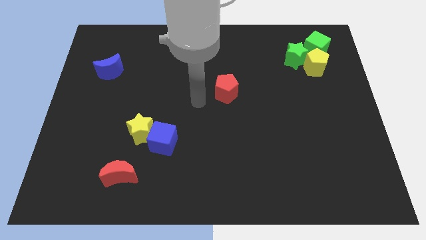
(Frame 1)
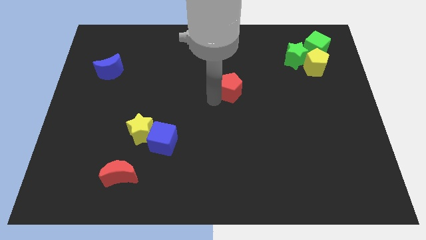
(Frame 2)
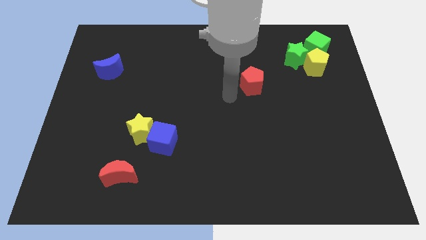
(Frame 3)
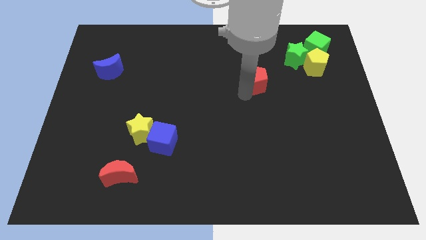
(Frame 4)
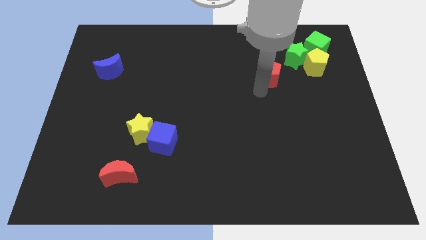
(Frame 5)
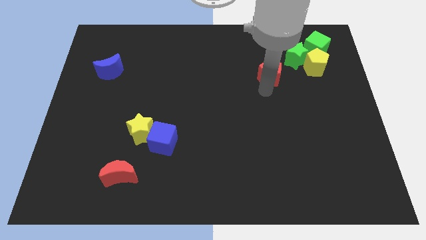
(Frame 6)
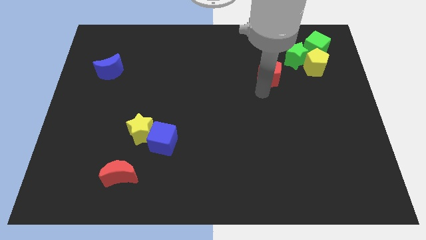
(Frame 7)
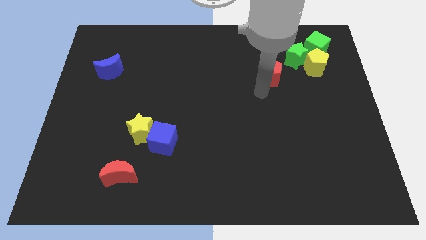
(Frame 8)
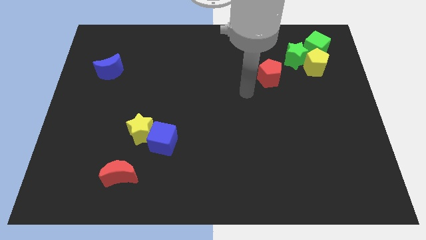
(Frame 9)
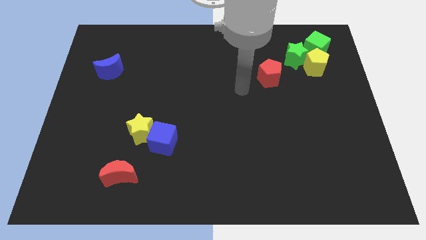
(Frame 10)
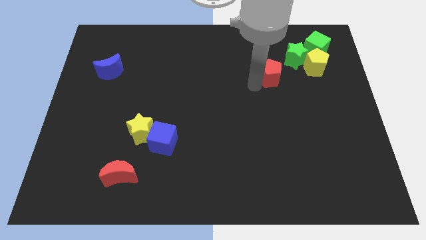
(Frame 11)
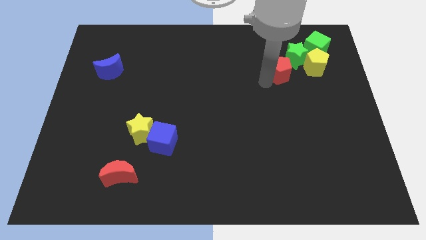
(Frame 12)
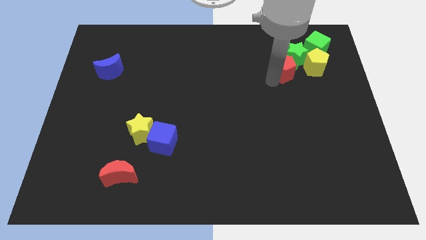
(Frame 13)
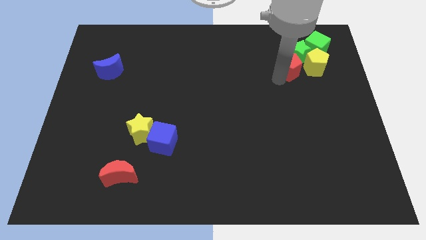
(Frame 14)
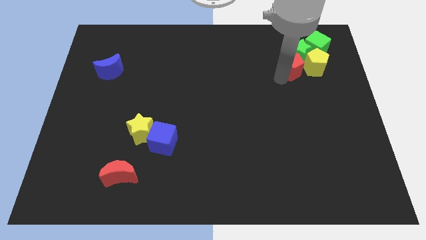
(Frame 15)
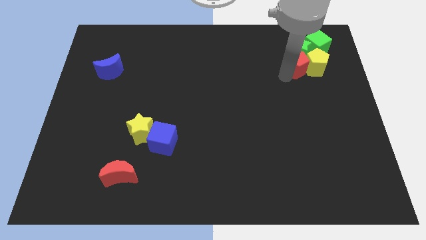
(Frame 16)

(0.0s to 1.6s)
move the red pentagon into the green star

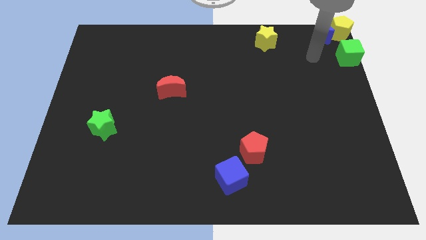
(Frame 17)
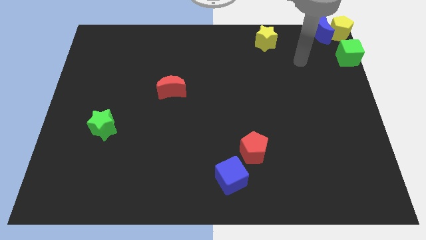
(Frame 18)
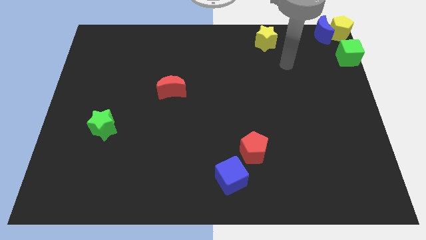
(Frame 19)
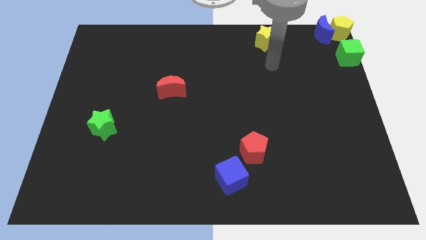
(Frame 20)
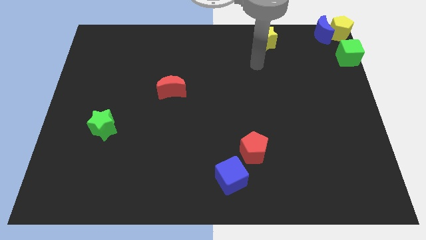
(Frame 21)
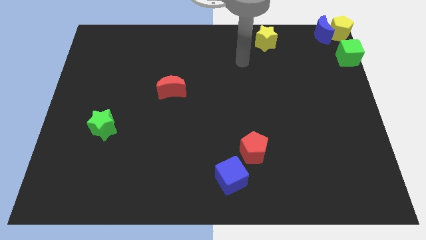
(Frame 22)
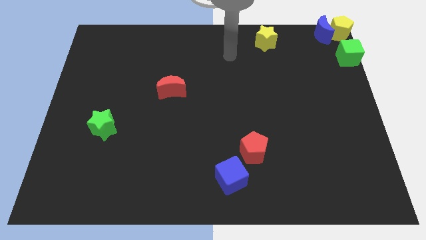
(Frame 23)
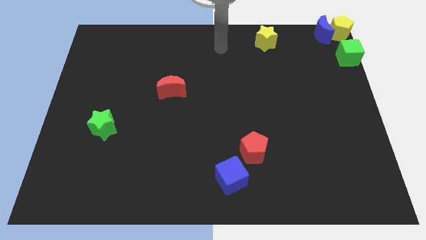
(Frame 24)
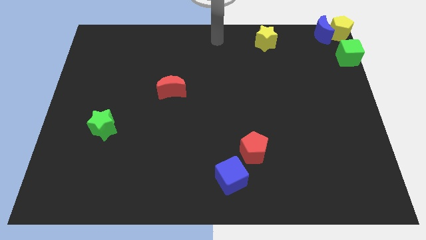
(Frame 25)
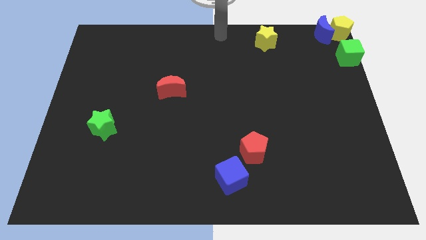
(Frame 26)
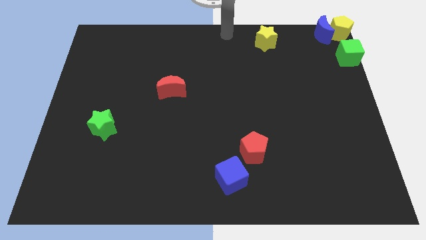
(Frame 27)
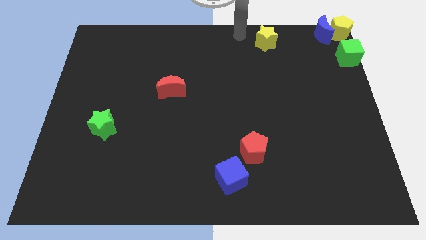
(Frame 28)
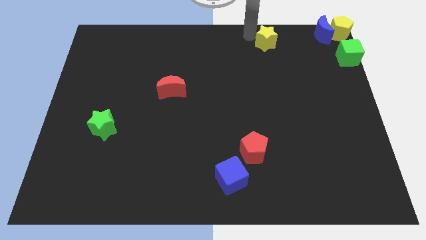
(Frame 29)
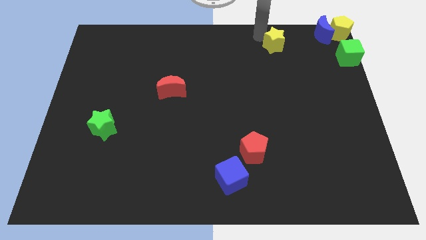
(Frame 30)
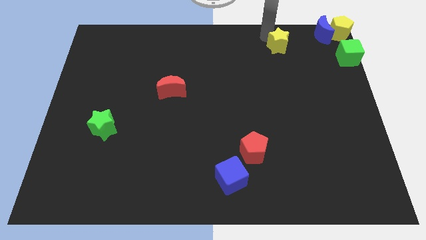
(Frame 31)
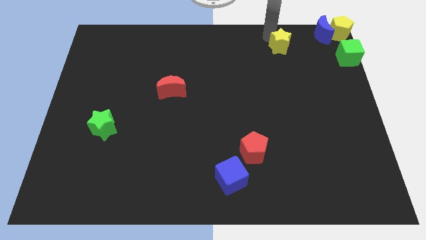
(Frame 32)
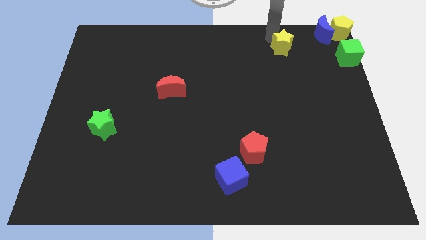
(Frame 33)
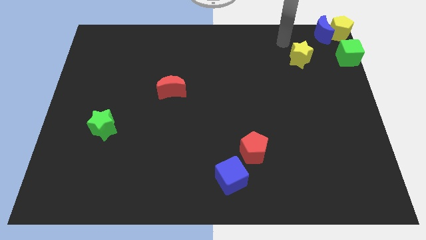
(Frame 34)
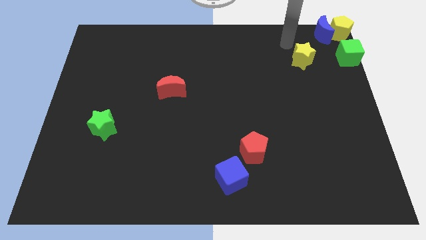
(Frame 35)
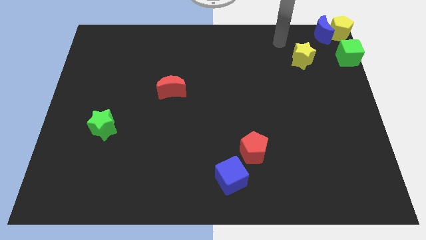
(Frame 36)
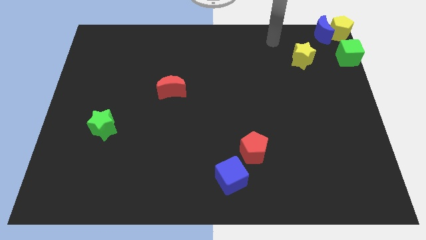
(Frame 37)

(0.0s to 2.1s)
move yellow star towards green star

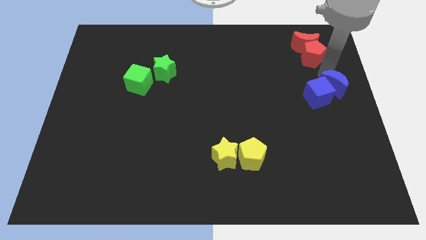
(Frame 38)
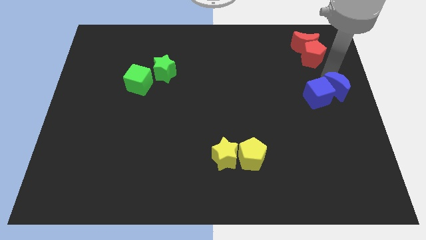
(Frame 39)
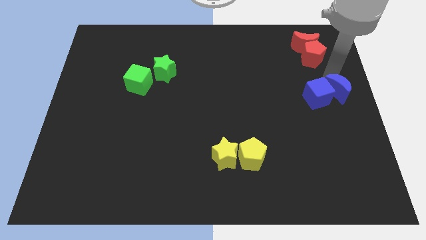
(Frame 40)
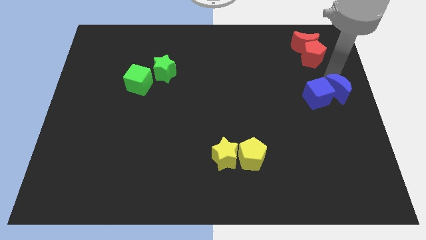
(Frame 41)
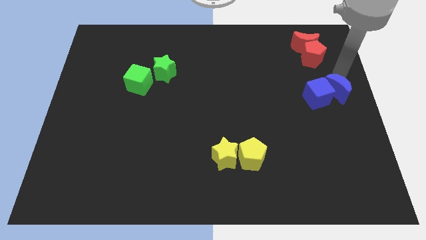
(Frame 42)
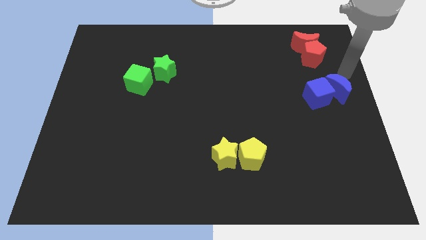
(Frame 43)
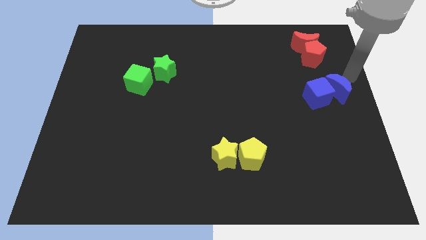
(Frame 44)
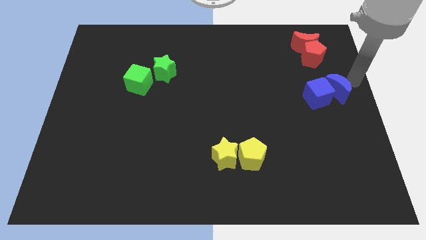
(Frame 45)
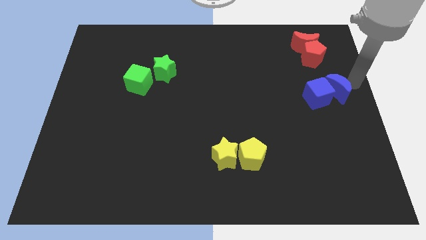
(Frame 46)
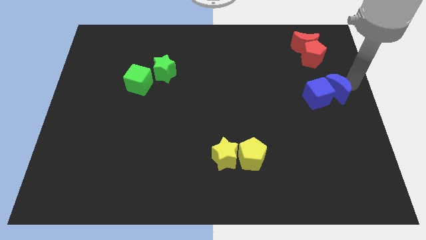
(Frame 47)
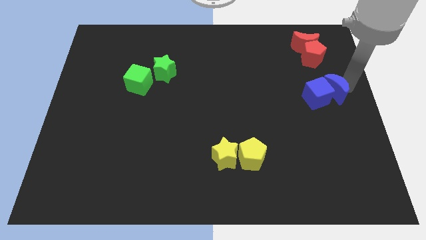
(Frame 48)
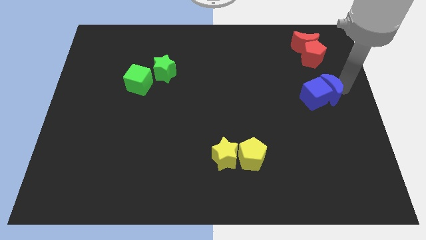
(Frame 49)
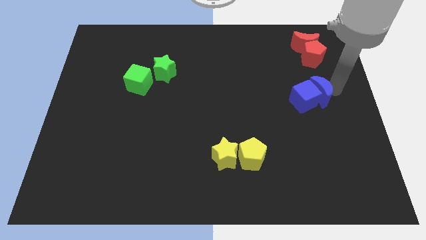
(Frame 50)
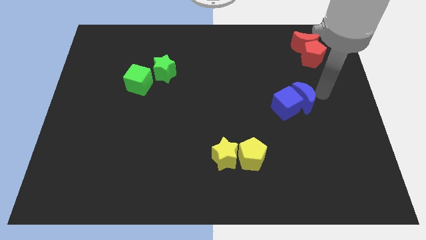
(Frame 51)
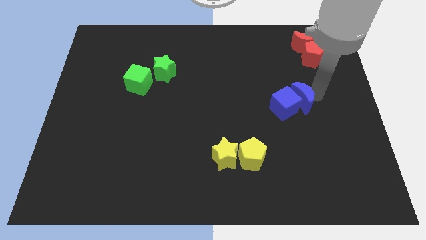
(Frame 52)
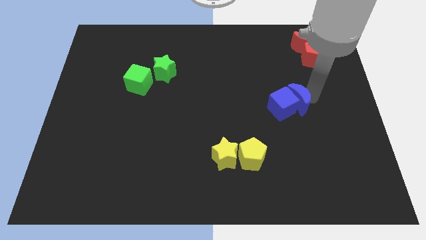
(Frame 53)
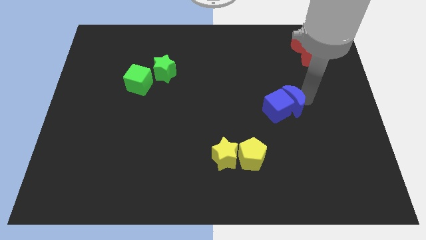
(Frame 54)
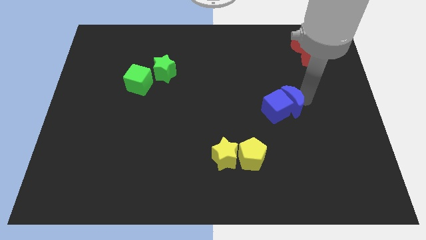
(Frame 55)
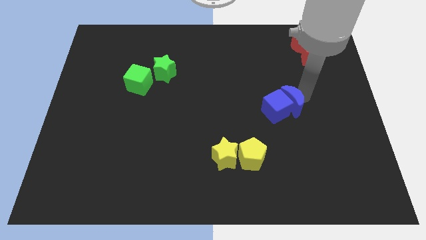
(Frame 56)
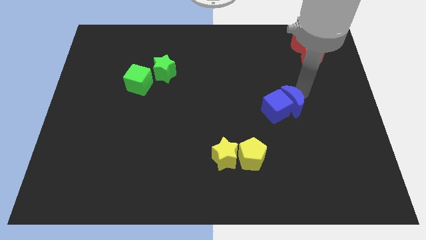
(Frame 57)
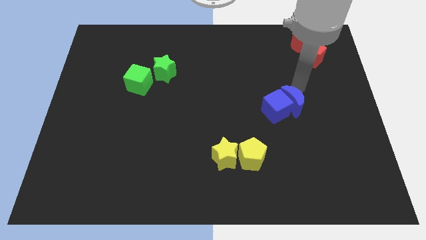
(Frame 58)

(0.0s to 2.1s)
move blue blocks towards center

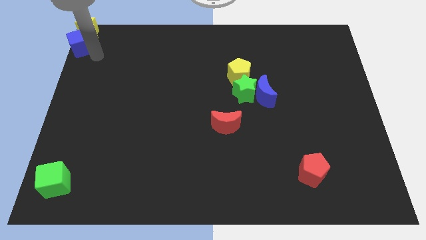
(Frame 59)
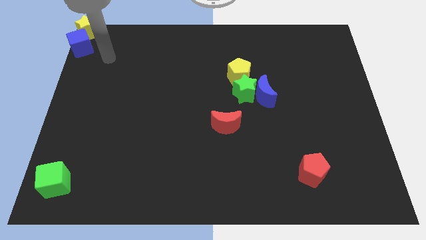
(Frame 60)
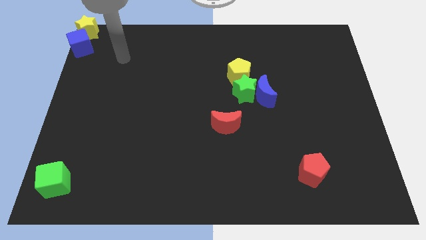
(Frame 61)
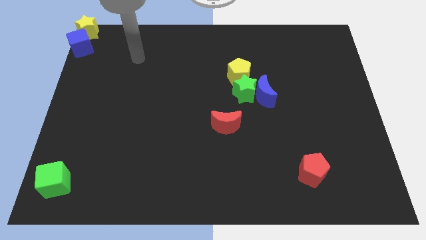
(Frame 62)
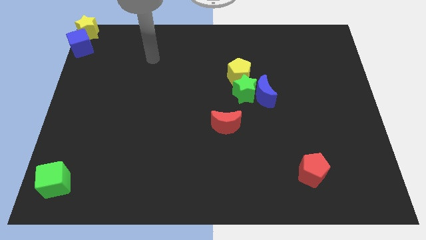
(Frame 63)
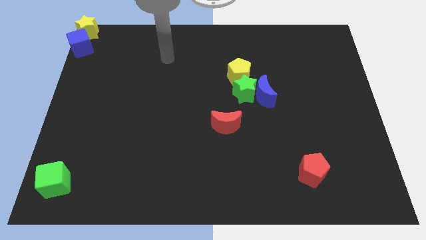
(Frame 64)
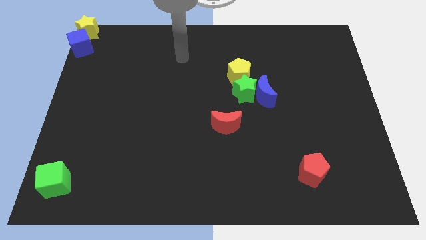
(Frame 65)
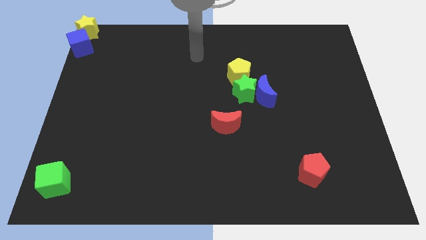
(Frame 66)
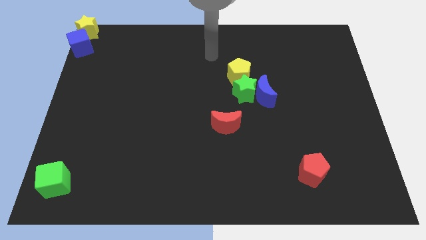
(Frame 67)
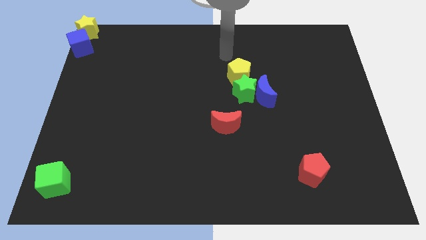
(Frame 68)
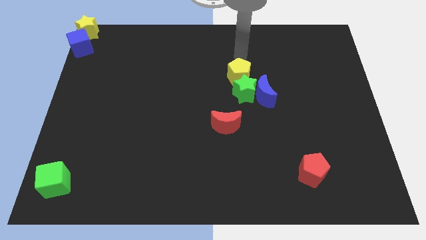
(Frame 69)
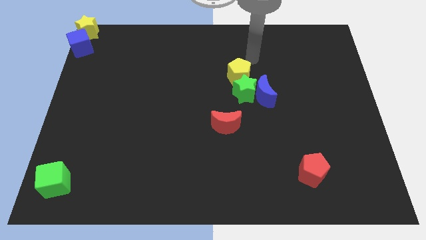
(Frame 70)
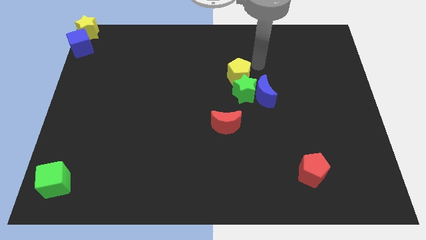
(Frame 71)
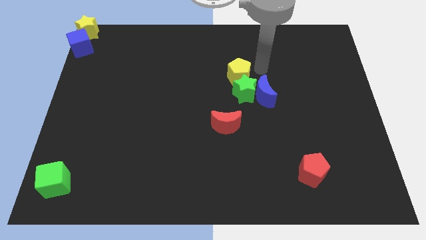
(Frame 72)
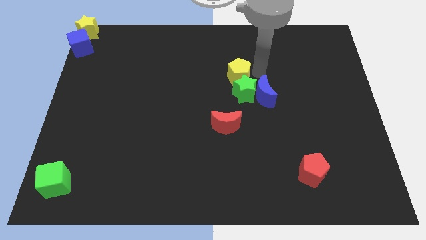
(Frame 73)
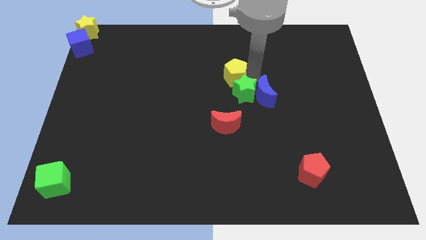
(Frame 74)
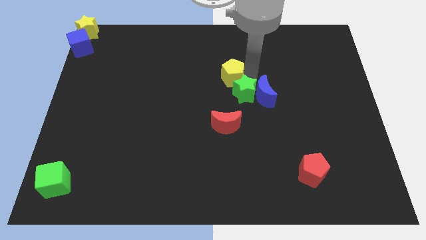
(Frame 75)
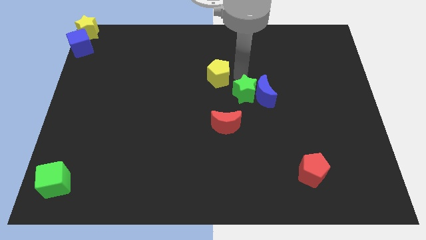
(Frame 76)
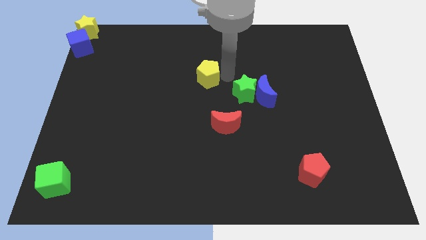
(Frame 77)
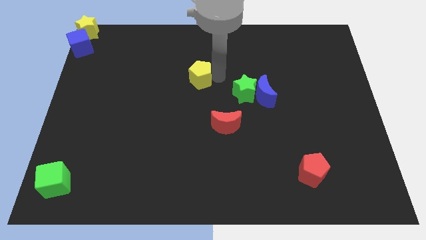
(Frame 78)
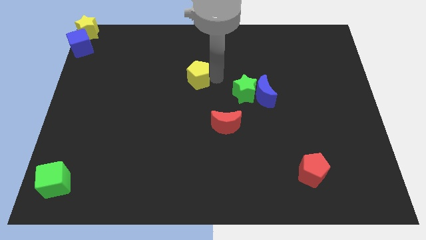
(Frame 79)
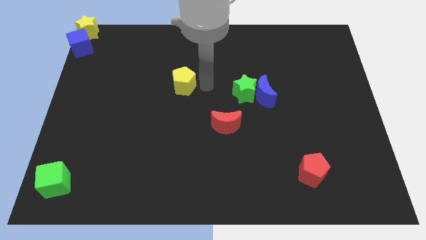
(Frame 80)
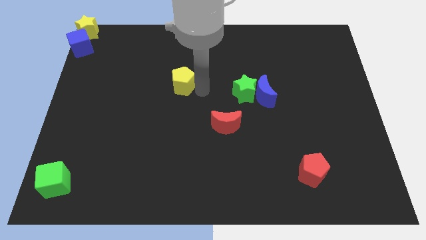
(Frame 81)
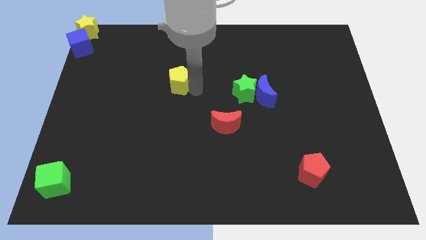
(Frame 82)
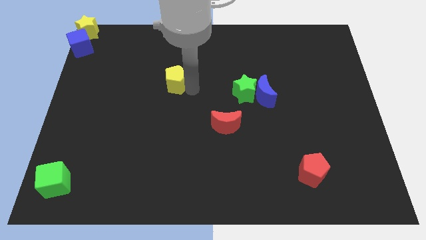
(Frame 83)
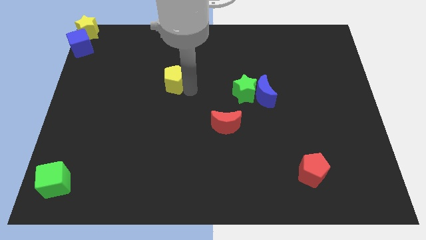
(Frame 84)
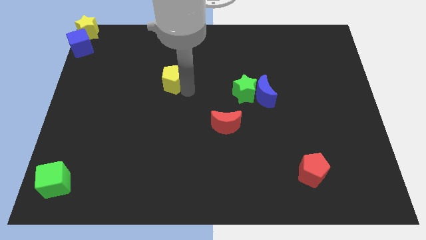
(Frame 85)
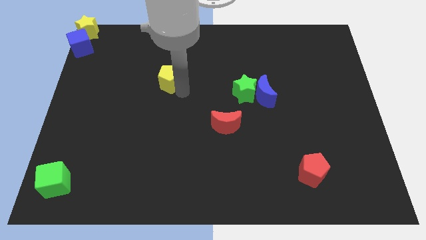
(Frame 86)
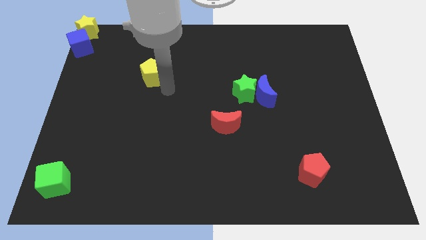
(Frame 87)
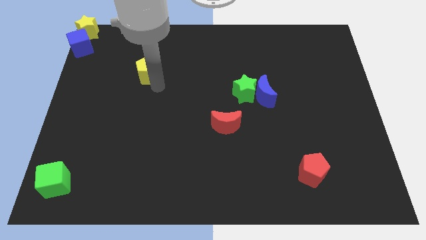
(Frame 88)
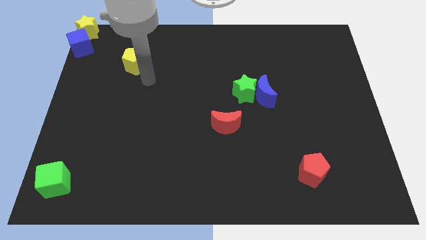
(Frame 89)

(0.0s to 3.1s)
move the yellow pentagon away from the green star
